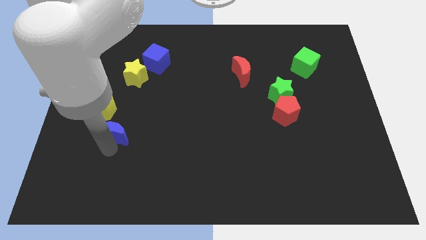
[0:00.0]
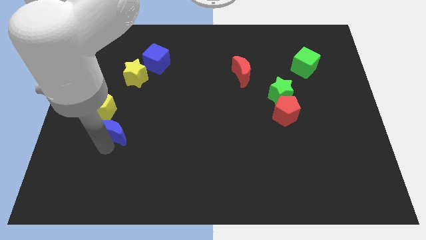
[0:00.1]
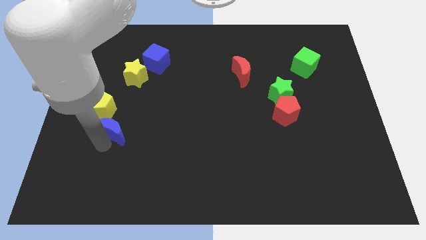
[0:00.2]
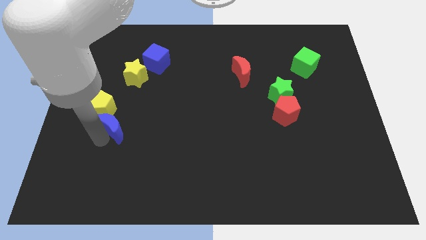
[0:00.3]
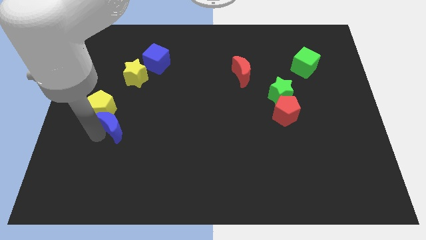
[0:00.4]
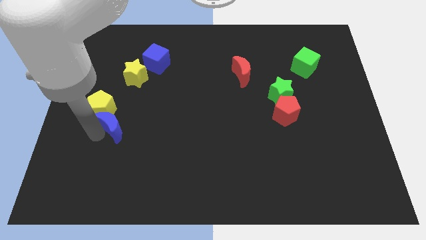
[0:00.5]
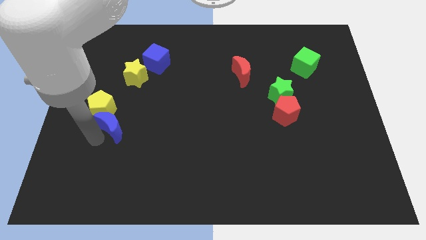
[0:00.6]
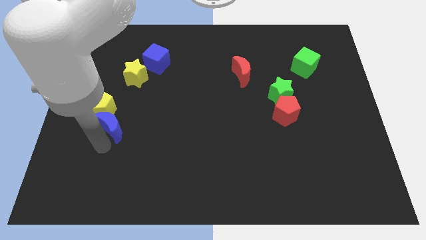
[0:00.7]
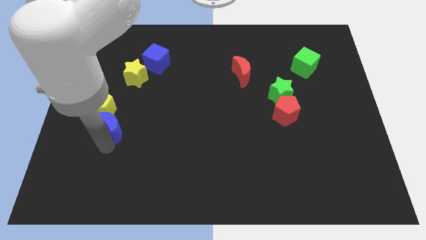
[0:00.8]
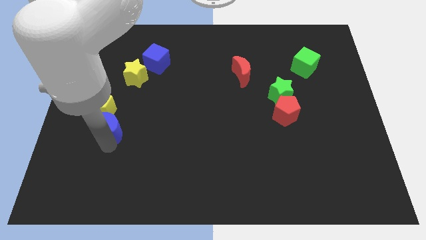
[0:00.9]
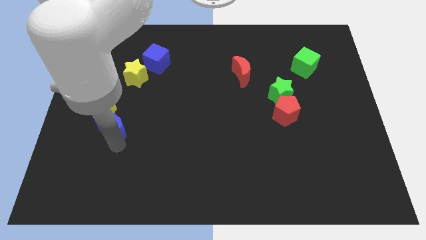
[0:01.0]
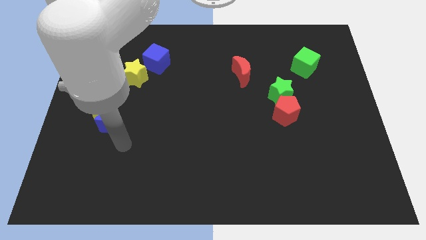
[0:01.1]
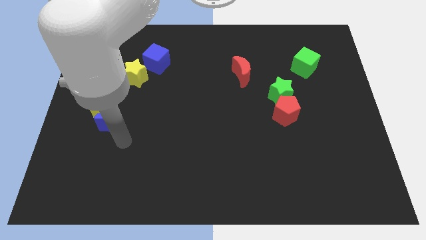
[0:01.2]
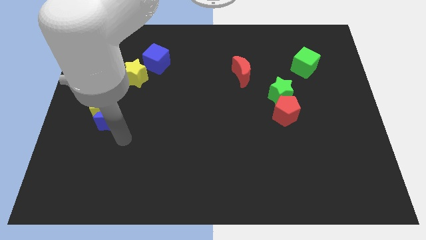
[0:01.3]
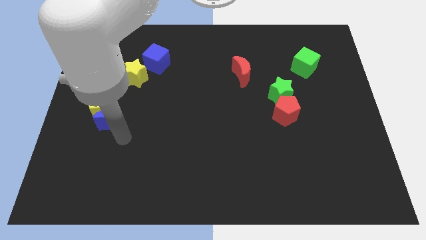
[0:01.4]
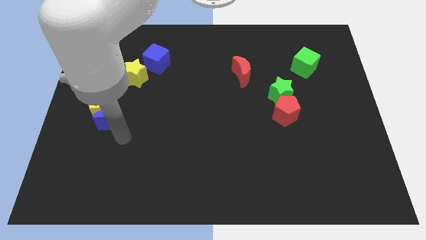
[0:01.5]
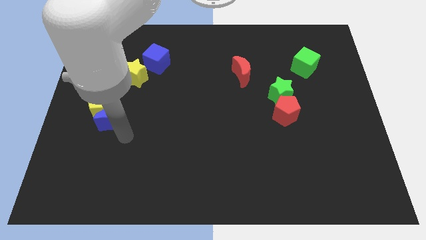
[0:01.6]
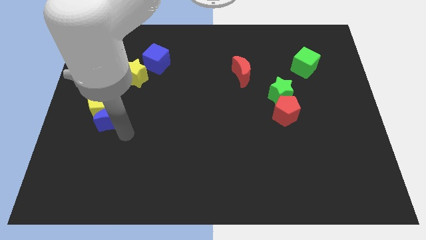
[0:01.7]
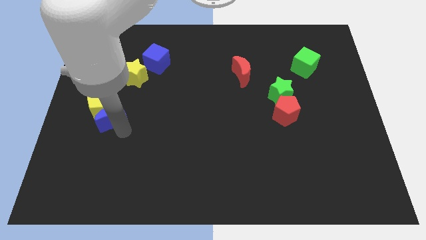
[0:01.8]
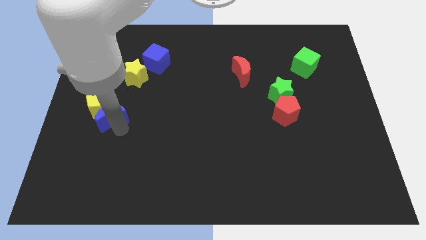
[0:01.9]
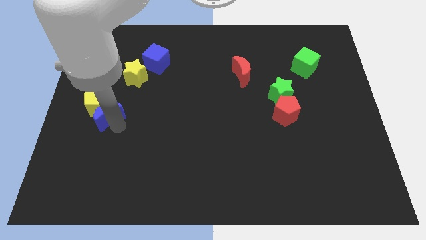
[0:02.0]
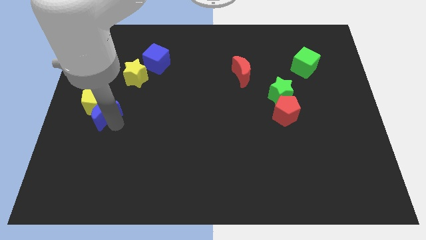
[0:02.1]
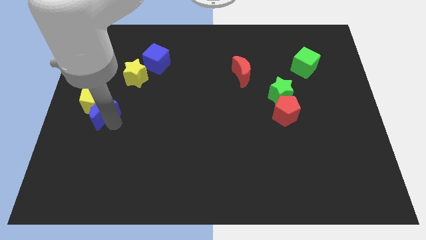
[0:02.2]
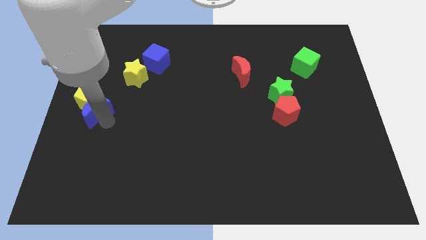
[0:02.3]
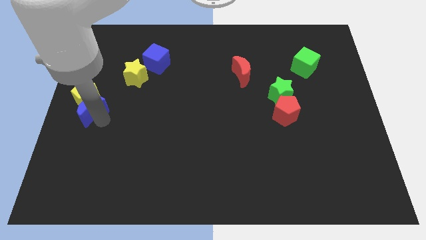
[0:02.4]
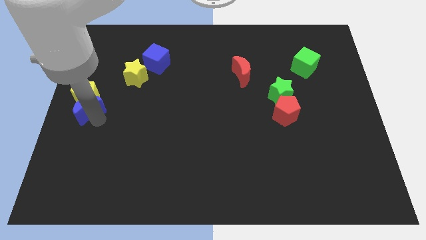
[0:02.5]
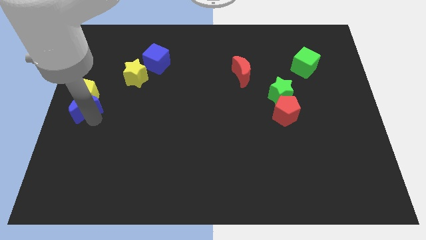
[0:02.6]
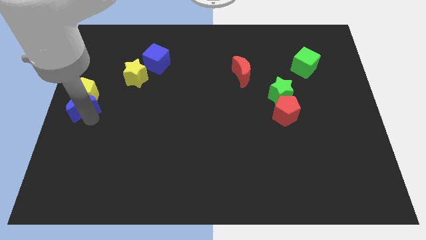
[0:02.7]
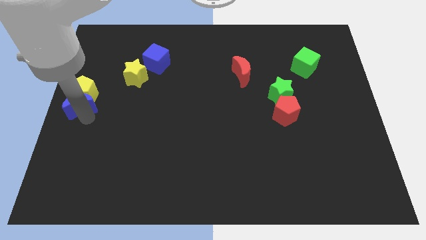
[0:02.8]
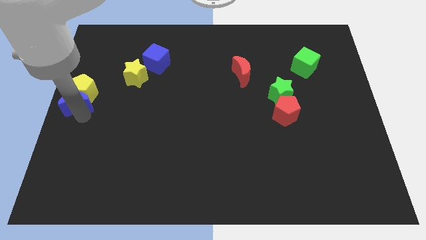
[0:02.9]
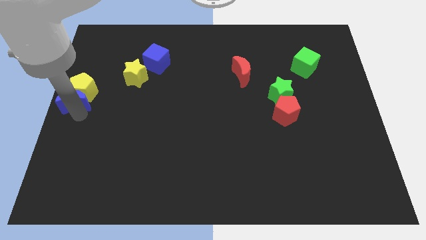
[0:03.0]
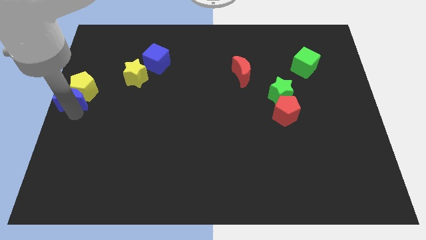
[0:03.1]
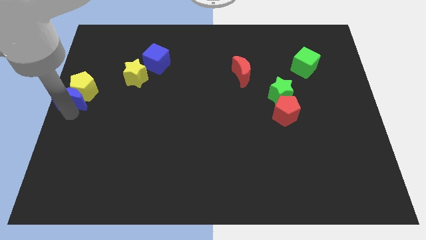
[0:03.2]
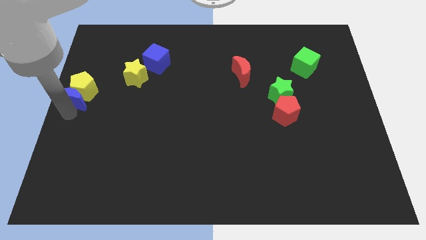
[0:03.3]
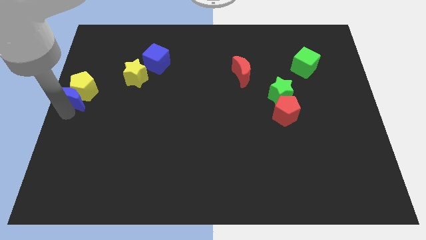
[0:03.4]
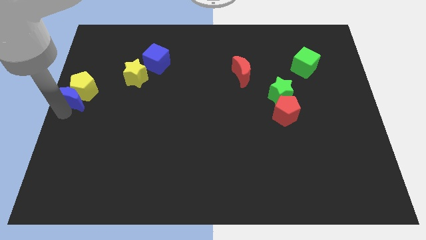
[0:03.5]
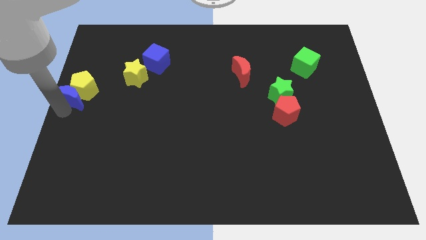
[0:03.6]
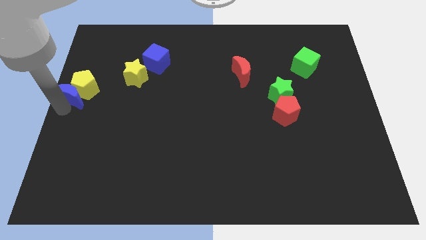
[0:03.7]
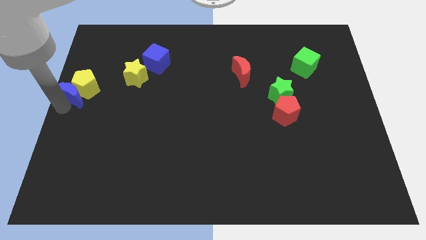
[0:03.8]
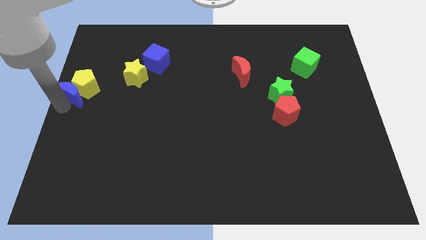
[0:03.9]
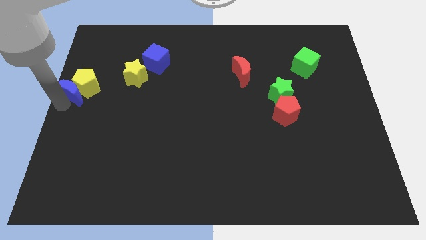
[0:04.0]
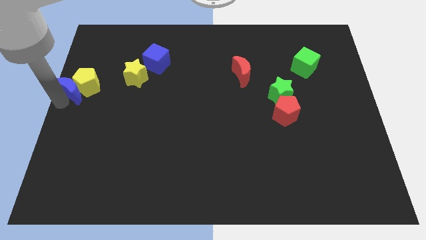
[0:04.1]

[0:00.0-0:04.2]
push the blue moon and yellow pentagon to the left of yellow star

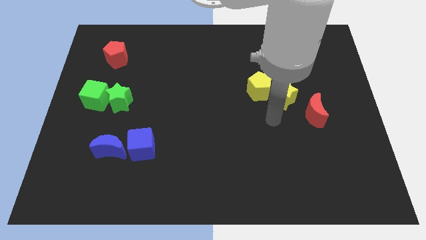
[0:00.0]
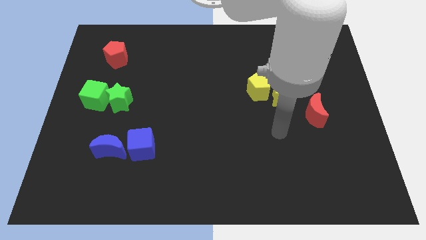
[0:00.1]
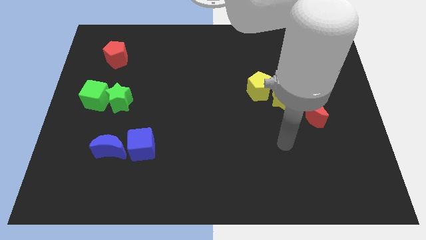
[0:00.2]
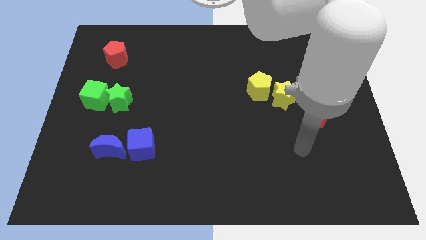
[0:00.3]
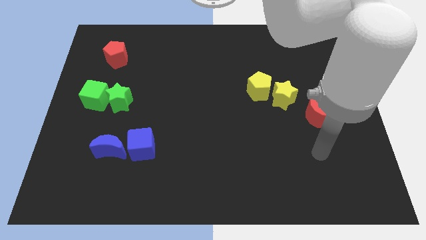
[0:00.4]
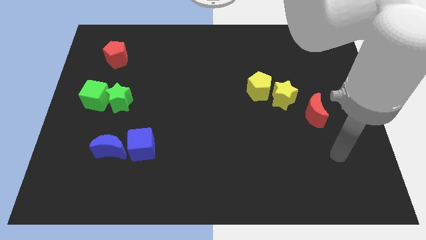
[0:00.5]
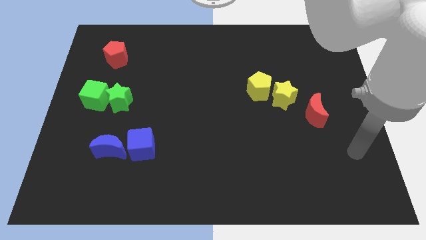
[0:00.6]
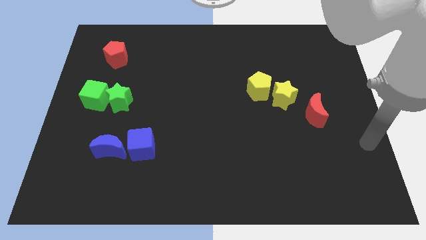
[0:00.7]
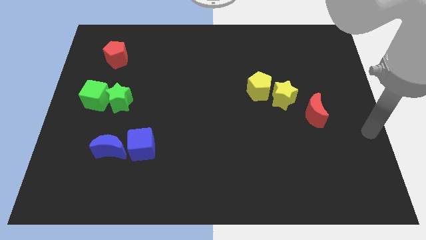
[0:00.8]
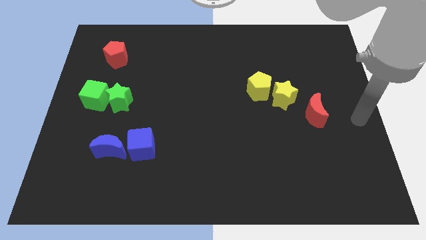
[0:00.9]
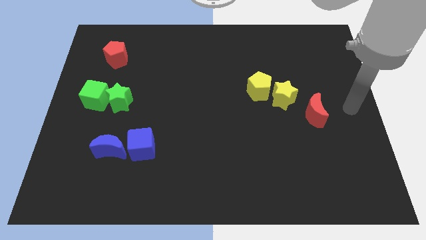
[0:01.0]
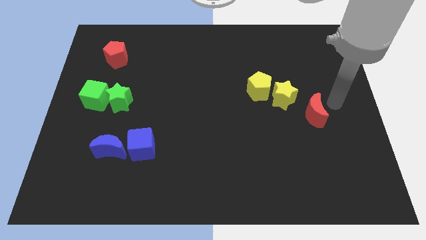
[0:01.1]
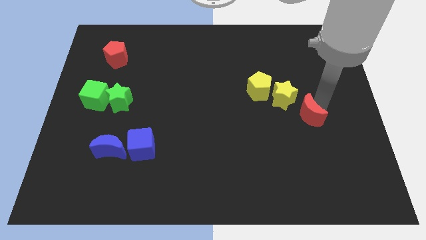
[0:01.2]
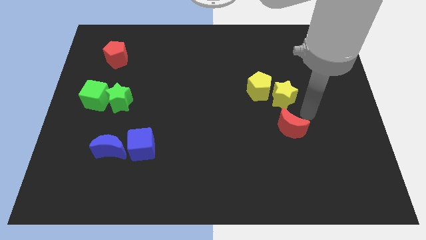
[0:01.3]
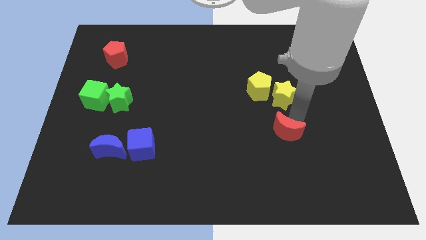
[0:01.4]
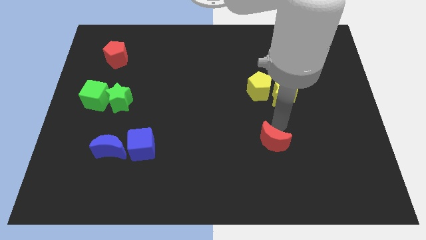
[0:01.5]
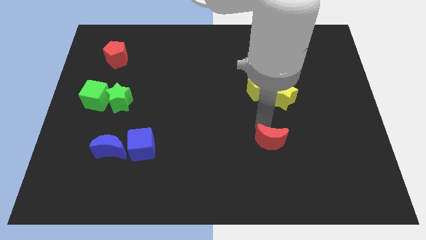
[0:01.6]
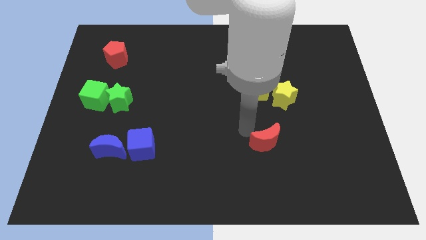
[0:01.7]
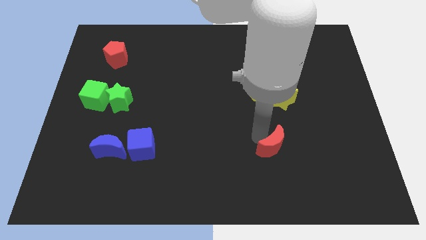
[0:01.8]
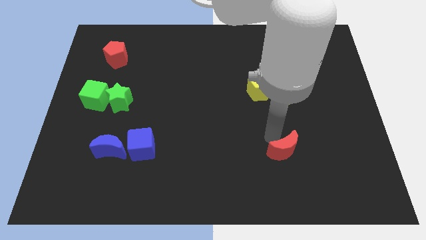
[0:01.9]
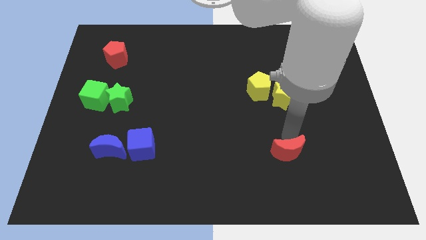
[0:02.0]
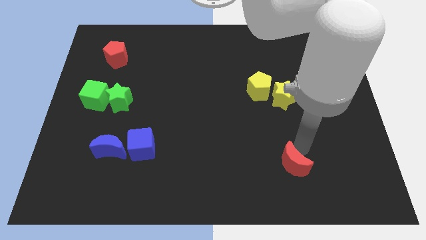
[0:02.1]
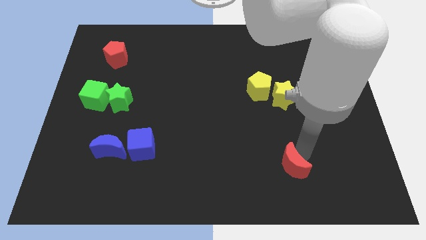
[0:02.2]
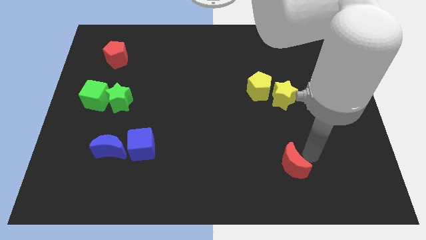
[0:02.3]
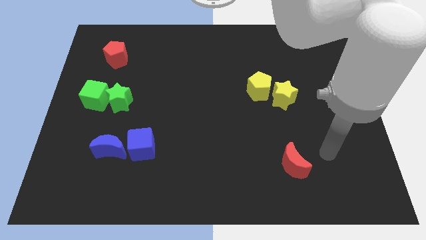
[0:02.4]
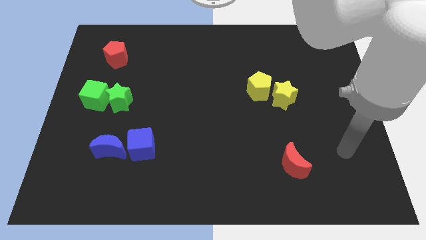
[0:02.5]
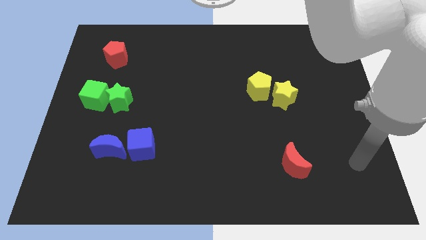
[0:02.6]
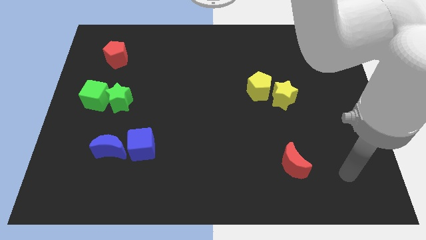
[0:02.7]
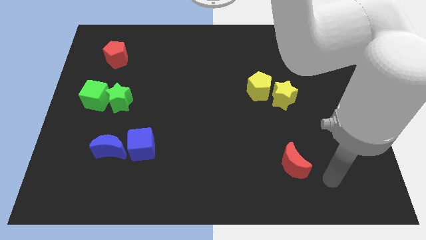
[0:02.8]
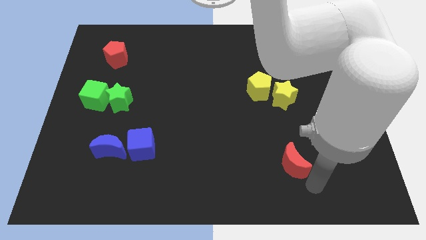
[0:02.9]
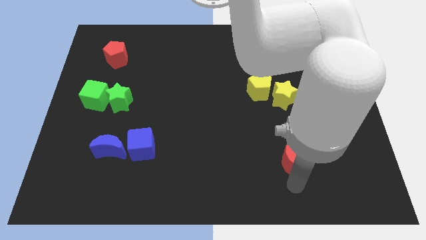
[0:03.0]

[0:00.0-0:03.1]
push the red moon downward

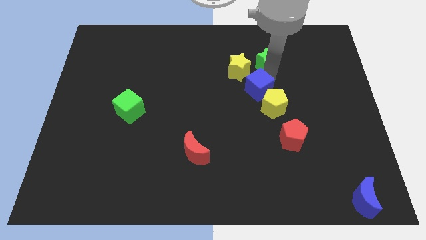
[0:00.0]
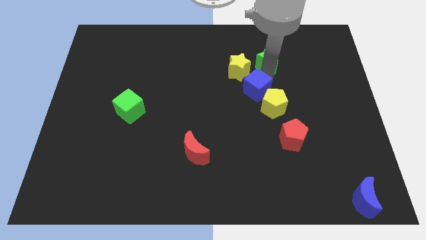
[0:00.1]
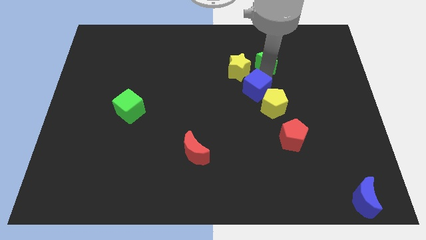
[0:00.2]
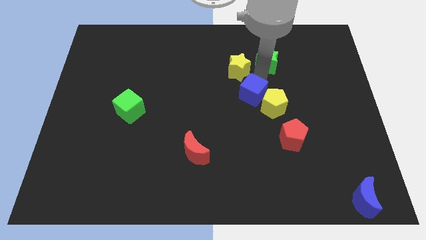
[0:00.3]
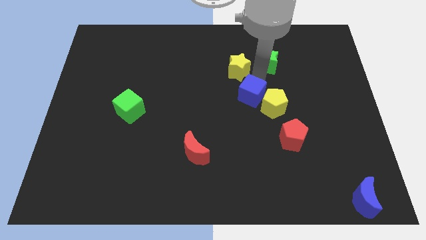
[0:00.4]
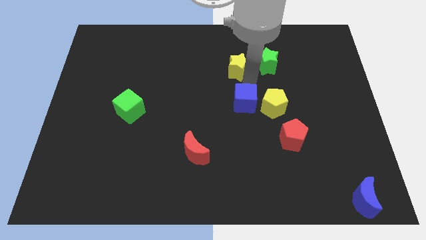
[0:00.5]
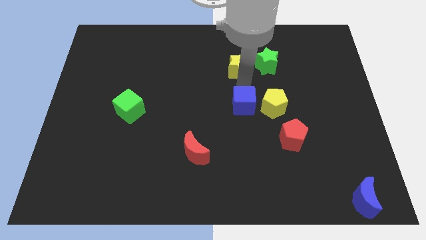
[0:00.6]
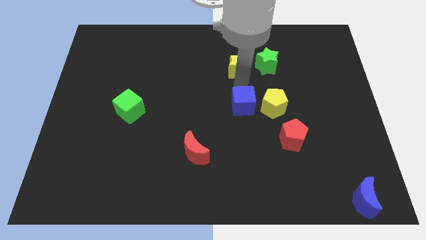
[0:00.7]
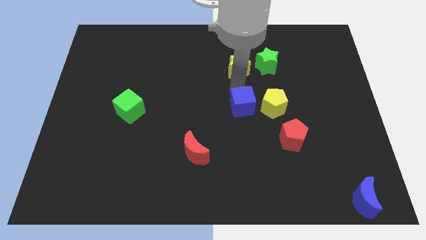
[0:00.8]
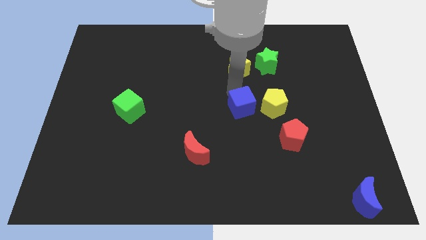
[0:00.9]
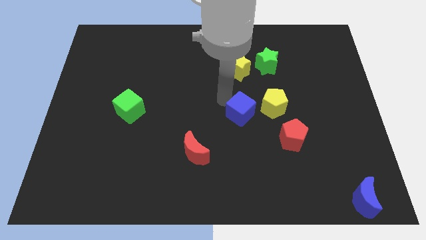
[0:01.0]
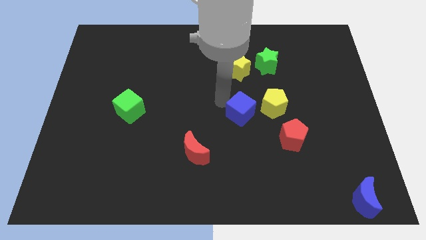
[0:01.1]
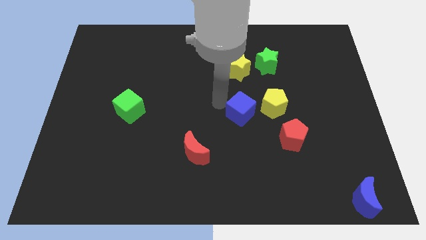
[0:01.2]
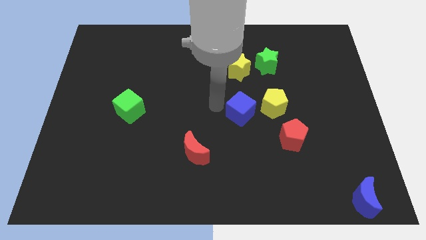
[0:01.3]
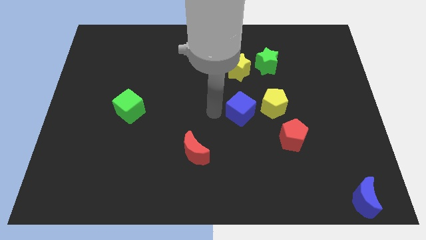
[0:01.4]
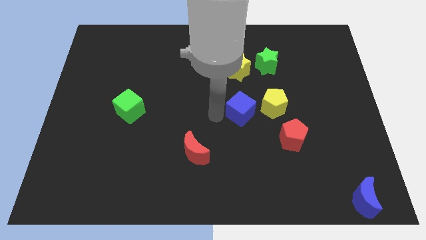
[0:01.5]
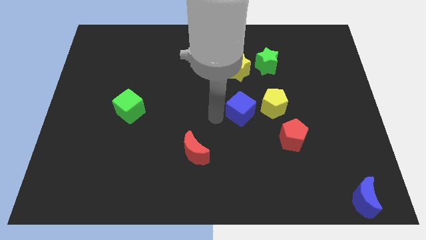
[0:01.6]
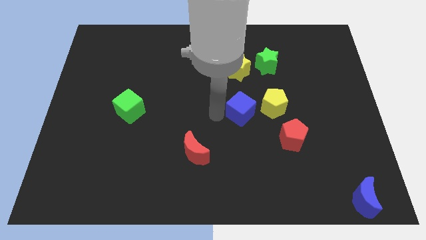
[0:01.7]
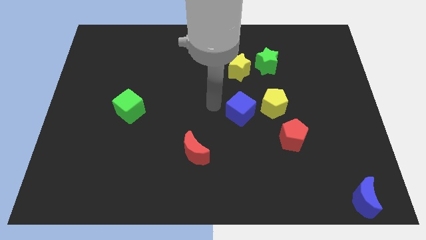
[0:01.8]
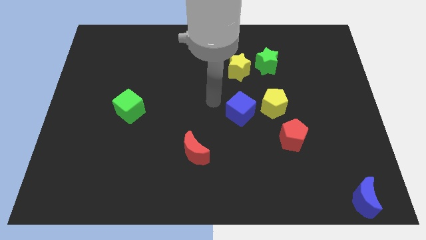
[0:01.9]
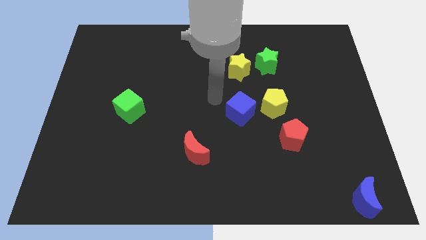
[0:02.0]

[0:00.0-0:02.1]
put the blue cube left to the yellow pentagon
